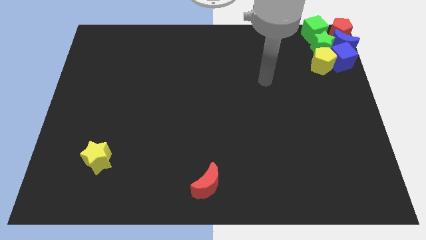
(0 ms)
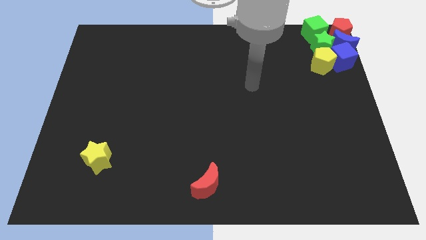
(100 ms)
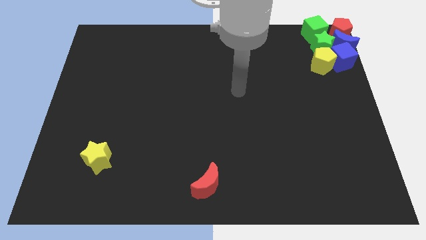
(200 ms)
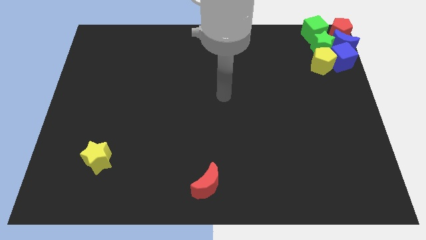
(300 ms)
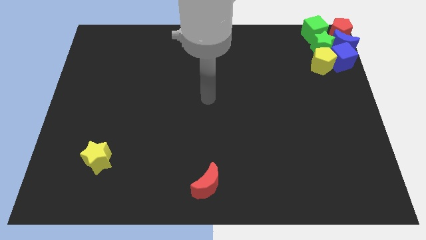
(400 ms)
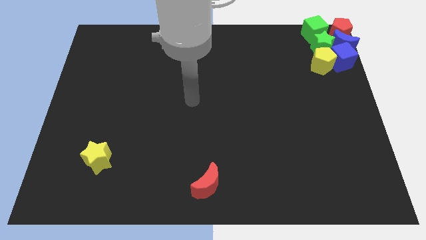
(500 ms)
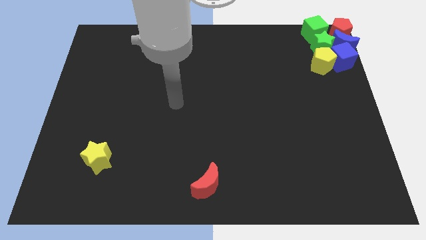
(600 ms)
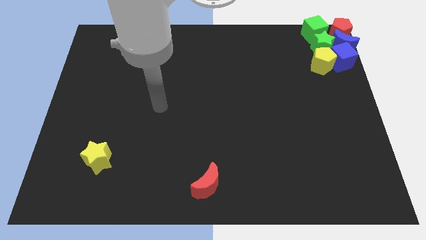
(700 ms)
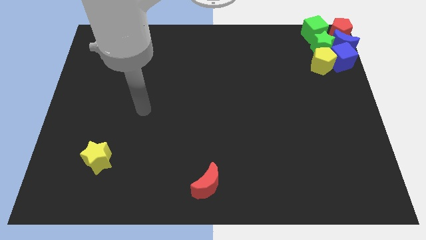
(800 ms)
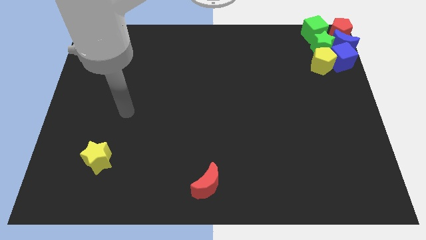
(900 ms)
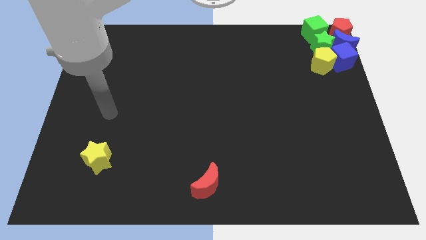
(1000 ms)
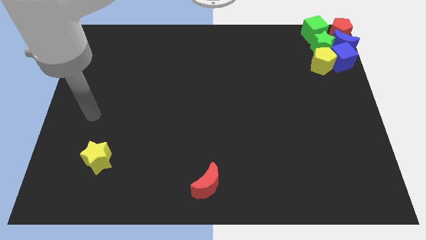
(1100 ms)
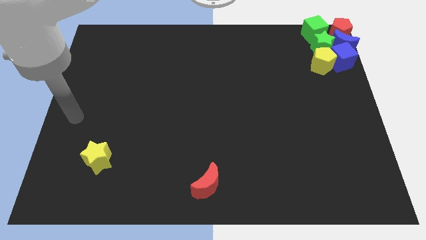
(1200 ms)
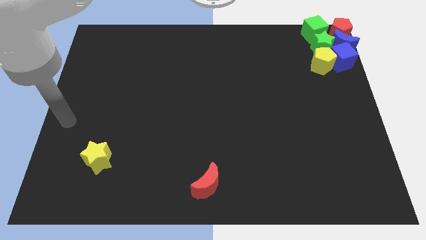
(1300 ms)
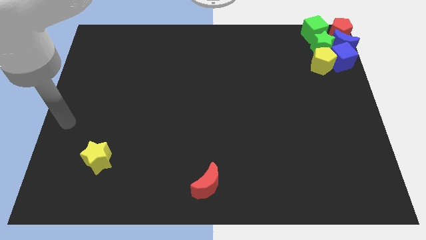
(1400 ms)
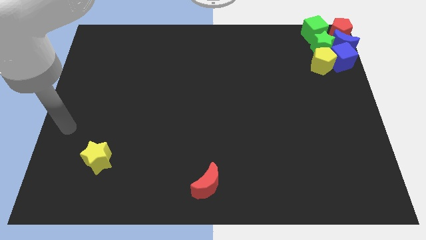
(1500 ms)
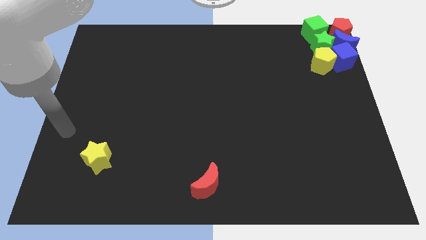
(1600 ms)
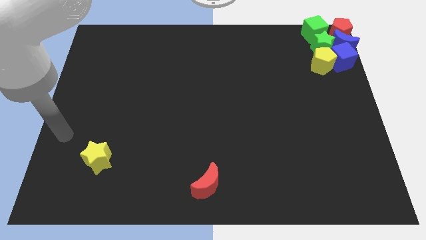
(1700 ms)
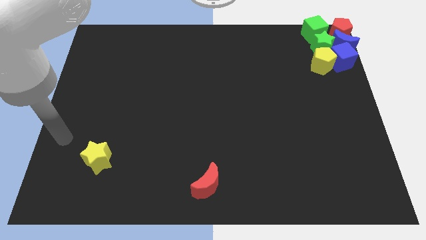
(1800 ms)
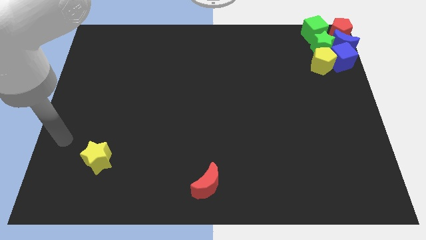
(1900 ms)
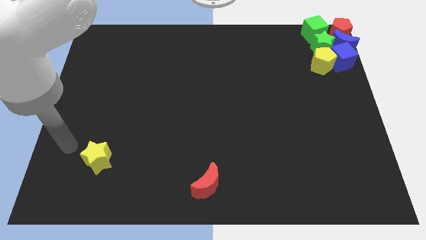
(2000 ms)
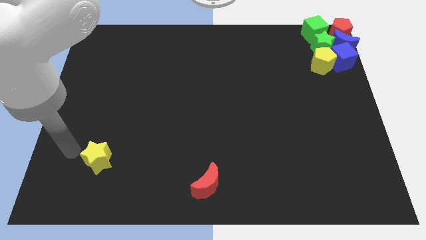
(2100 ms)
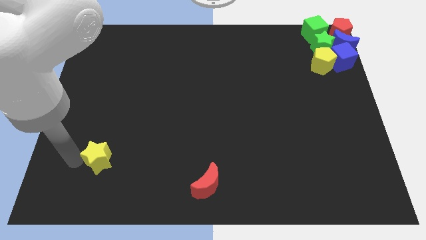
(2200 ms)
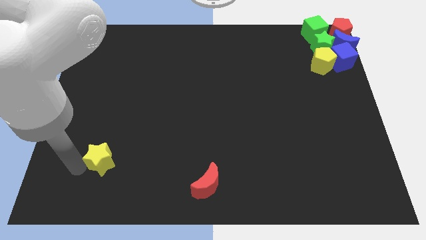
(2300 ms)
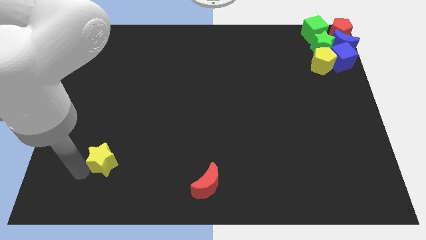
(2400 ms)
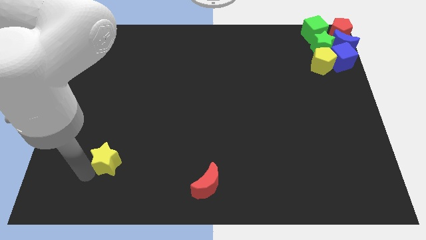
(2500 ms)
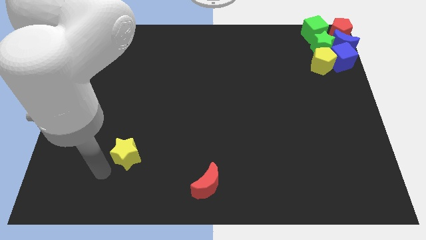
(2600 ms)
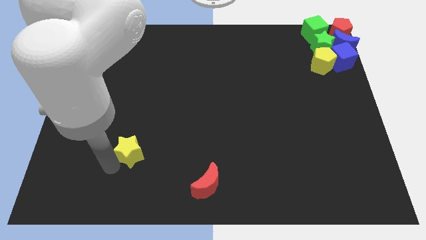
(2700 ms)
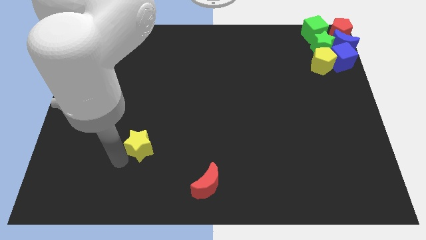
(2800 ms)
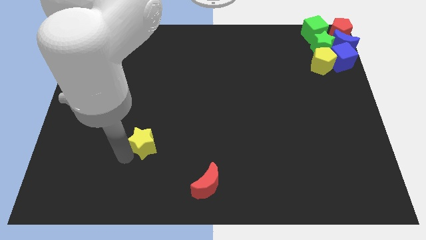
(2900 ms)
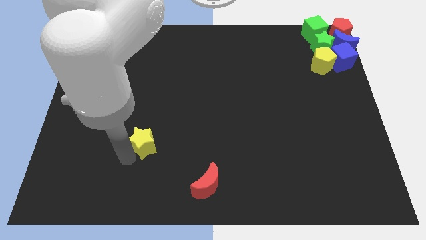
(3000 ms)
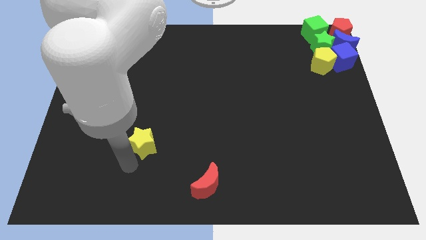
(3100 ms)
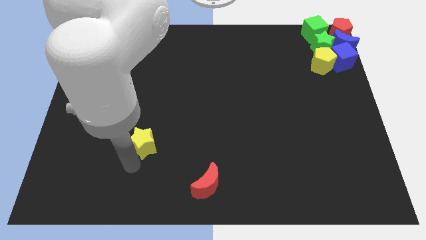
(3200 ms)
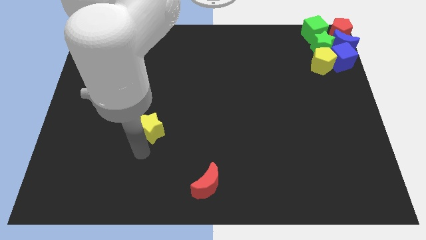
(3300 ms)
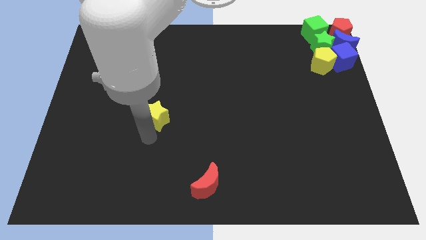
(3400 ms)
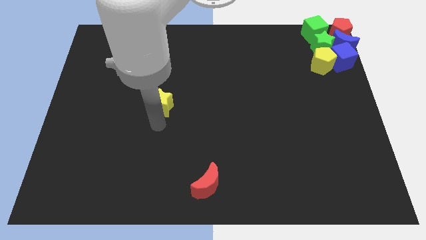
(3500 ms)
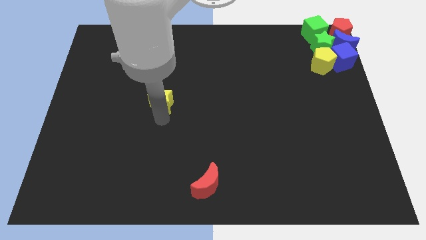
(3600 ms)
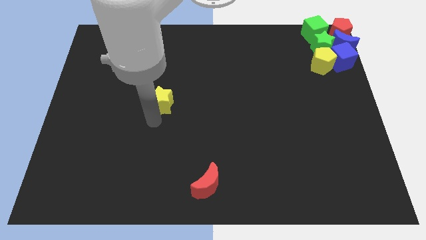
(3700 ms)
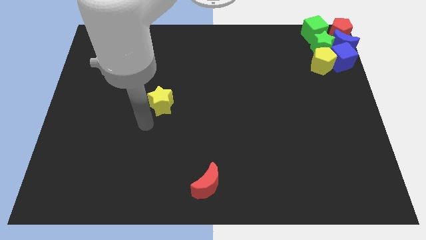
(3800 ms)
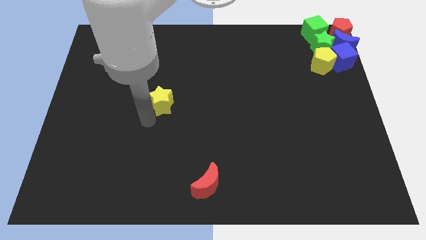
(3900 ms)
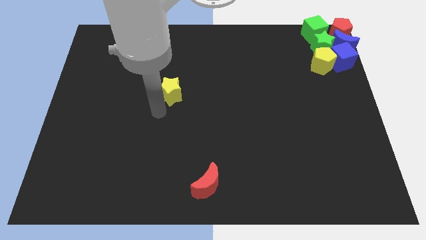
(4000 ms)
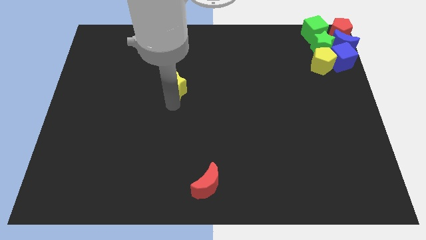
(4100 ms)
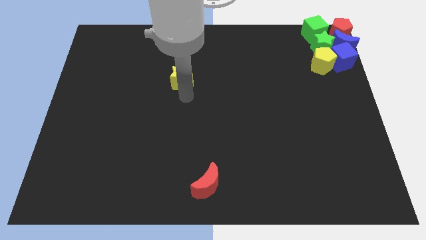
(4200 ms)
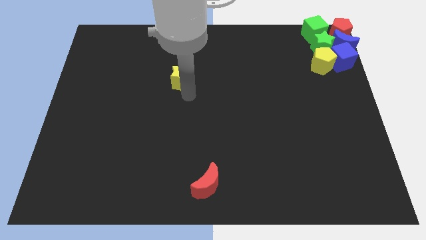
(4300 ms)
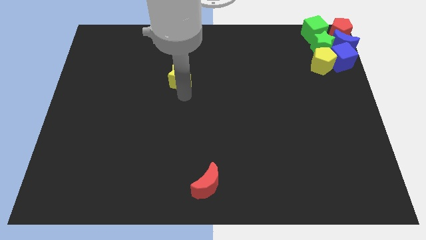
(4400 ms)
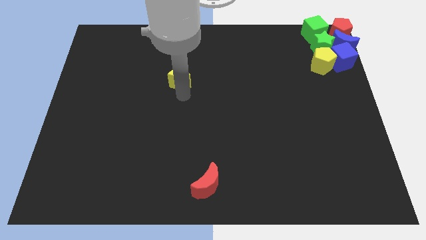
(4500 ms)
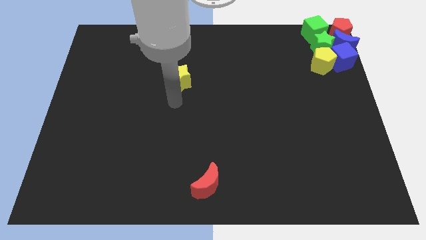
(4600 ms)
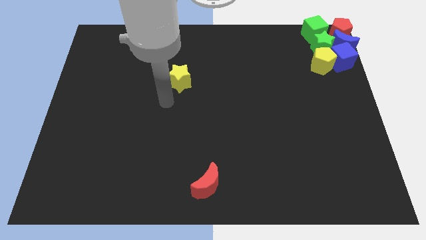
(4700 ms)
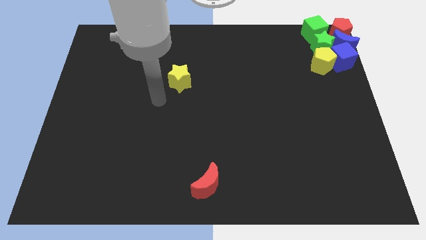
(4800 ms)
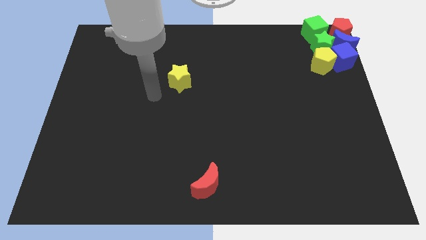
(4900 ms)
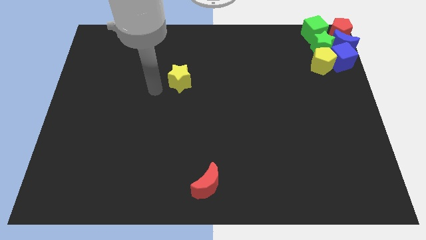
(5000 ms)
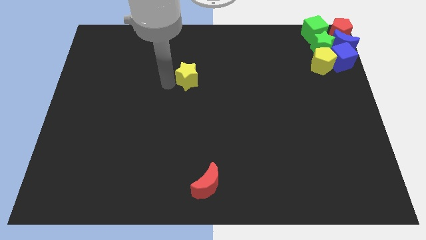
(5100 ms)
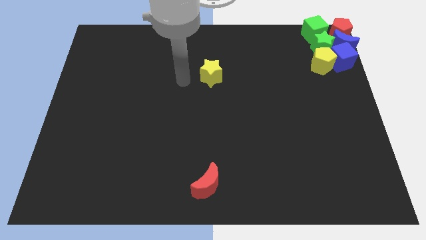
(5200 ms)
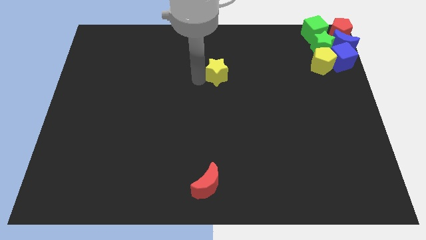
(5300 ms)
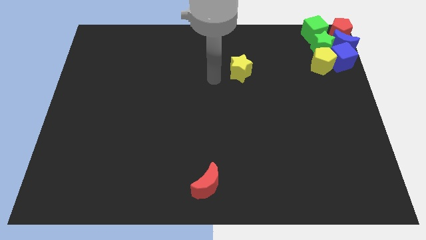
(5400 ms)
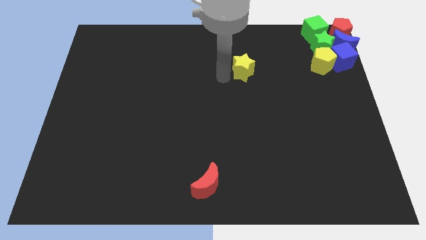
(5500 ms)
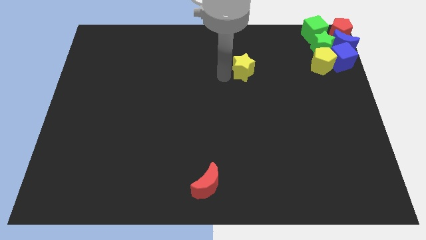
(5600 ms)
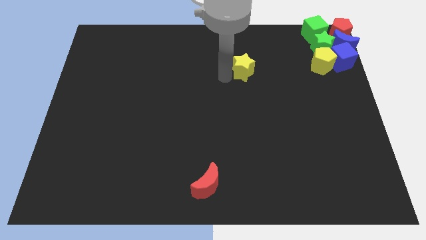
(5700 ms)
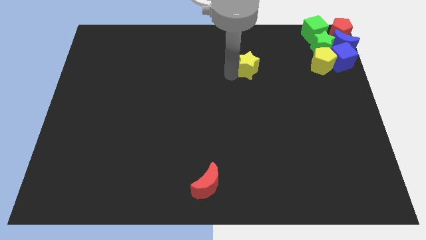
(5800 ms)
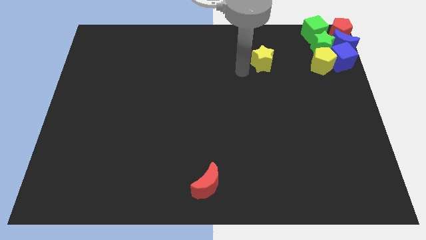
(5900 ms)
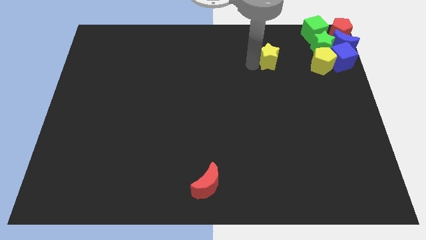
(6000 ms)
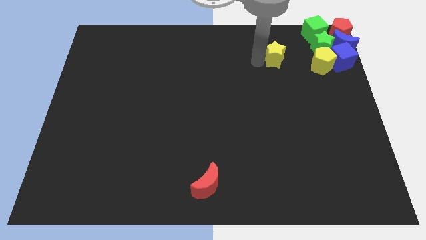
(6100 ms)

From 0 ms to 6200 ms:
push the yellow star towards the top right corner of the board

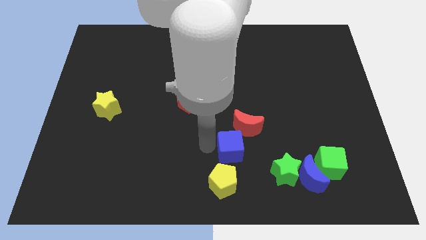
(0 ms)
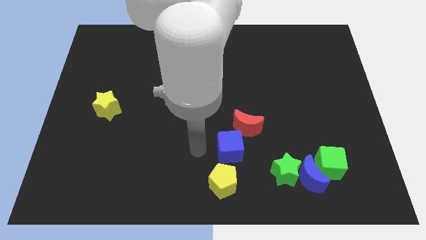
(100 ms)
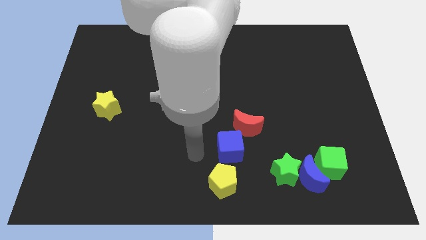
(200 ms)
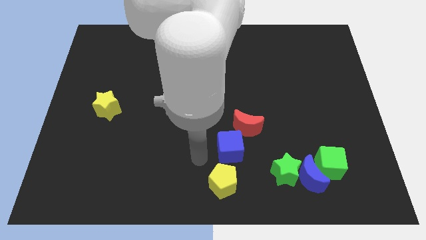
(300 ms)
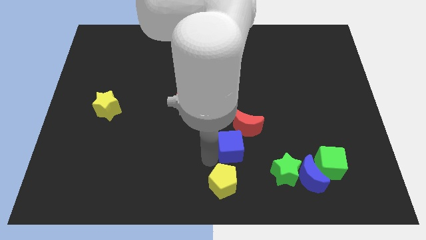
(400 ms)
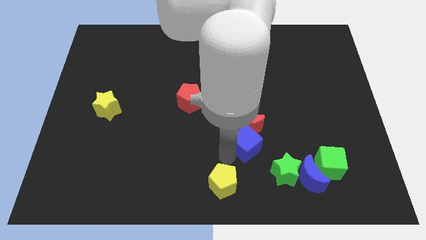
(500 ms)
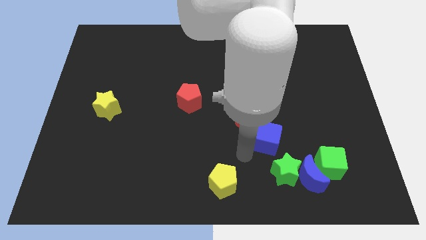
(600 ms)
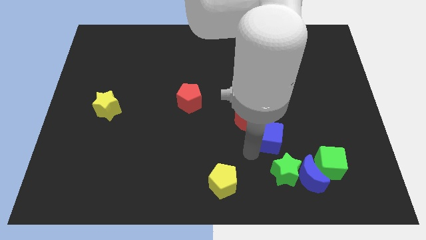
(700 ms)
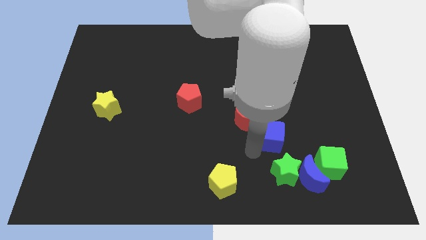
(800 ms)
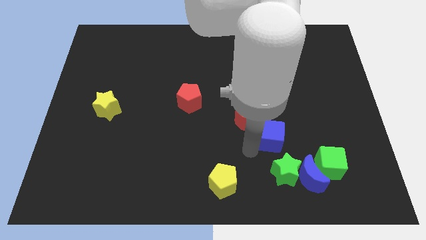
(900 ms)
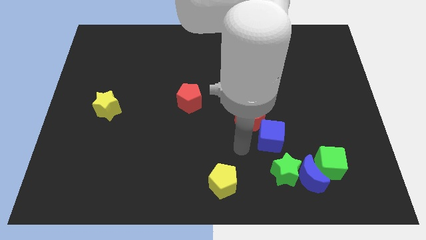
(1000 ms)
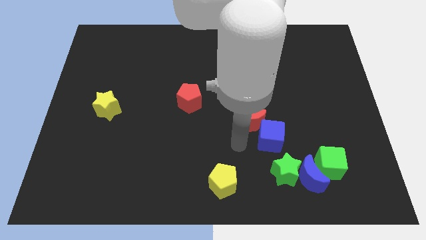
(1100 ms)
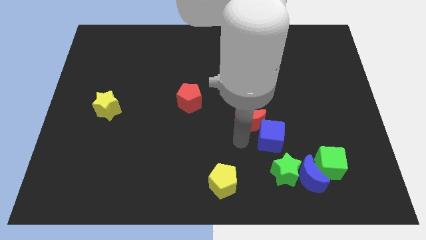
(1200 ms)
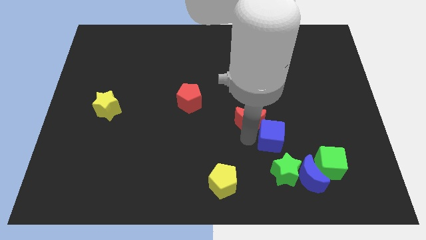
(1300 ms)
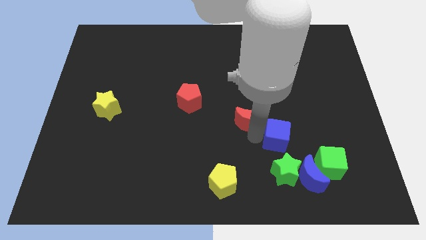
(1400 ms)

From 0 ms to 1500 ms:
place blue cube to the bottom right of red moon

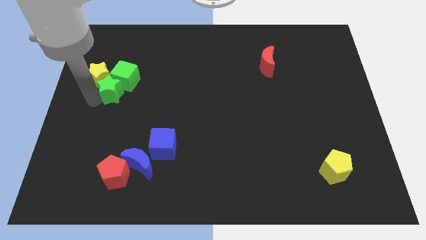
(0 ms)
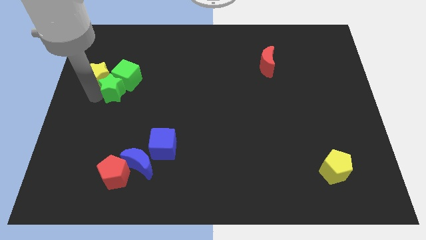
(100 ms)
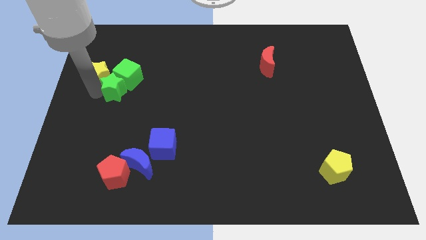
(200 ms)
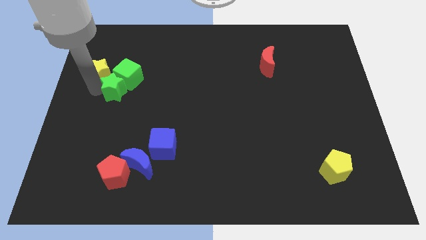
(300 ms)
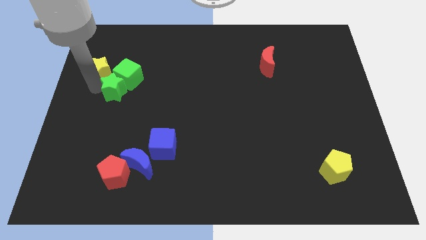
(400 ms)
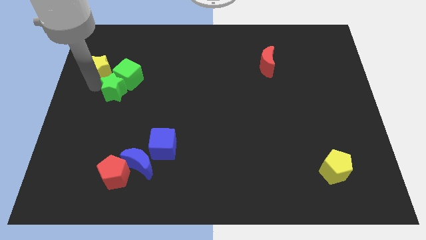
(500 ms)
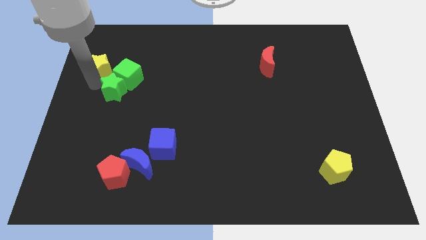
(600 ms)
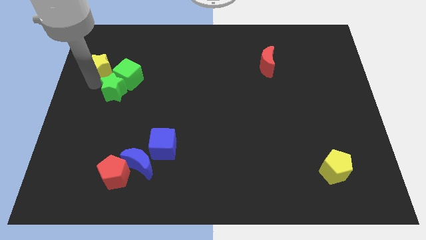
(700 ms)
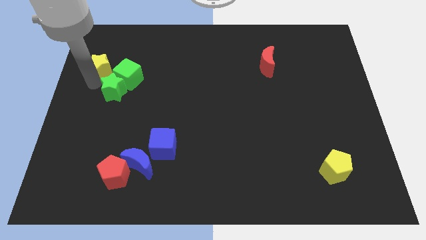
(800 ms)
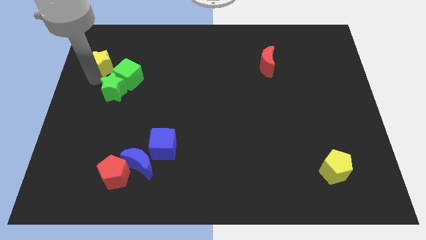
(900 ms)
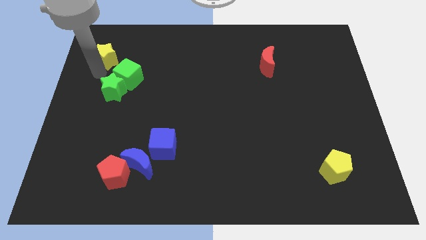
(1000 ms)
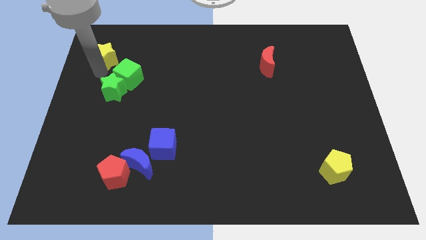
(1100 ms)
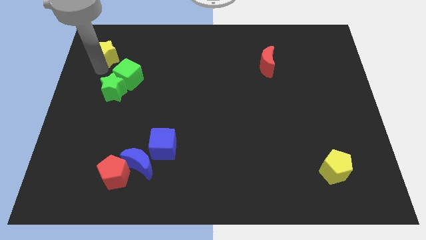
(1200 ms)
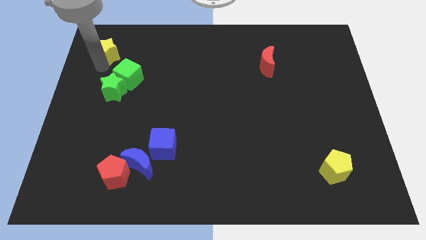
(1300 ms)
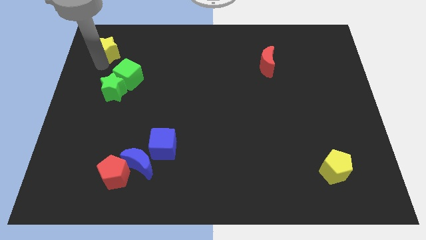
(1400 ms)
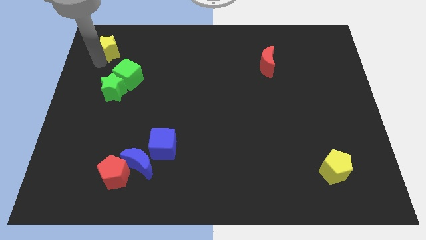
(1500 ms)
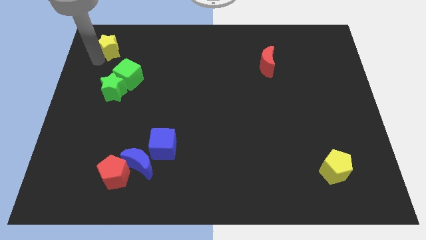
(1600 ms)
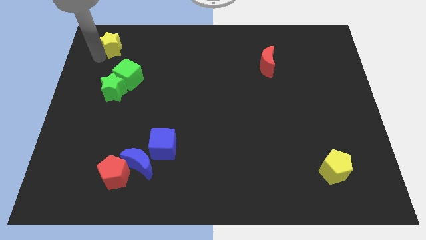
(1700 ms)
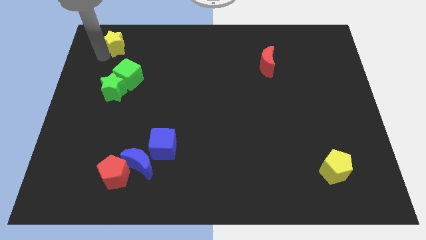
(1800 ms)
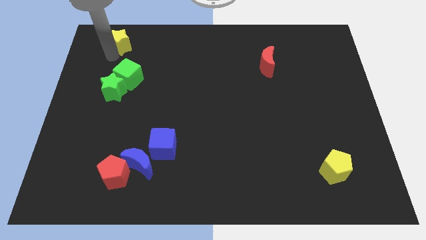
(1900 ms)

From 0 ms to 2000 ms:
move the yellow star to the top left of the board
